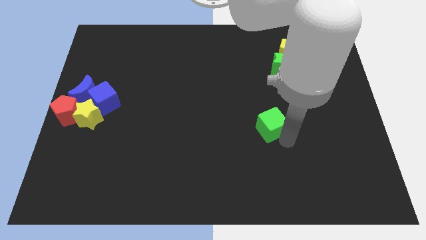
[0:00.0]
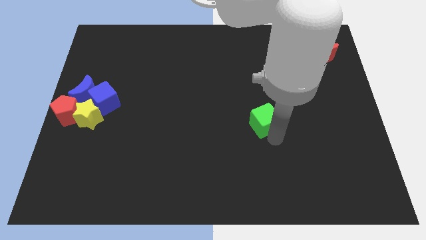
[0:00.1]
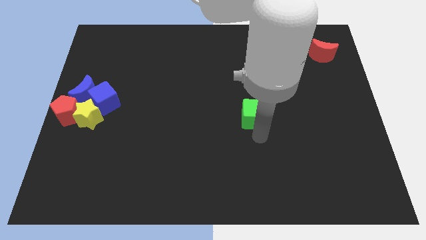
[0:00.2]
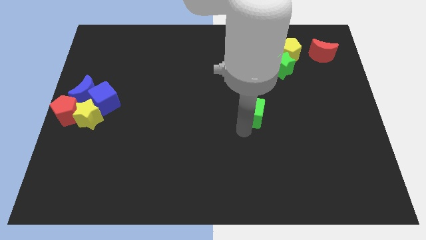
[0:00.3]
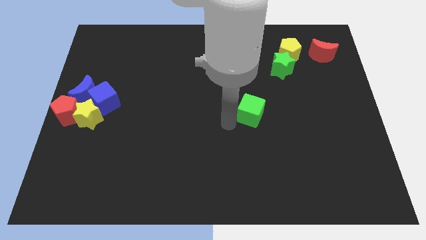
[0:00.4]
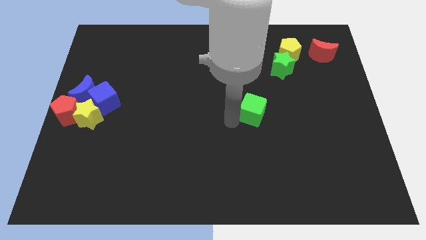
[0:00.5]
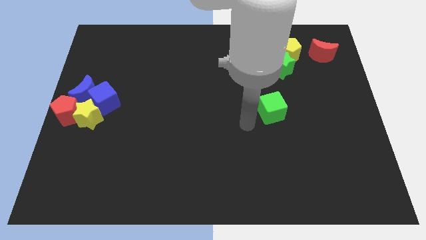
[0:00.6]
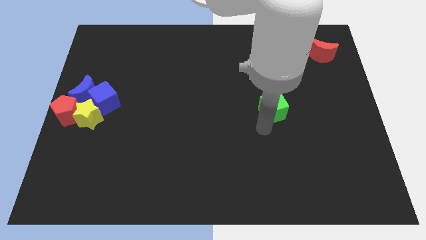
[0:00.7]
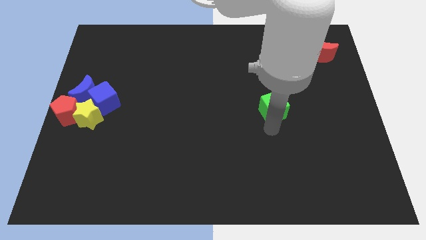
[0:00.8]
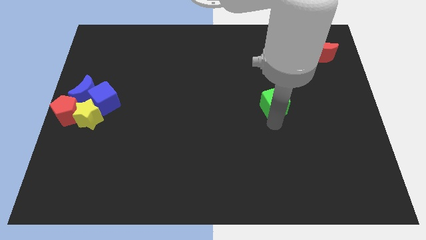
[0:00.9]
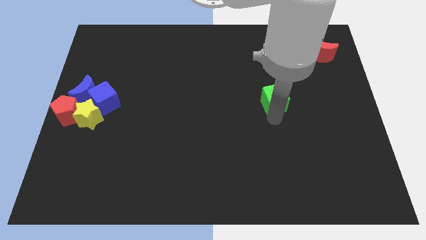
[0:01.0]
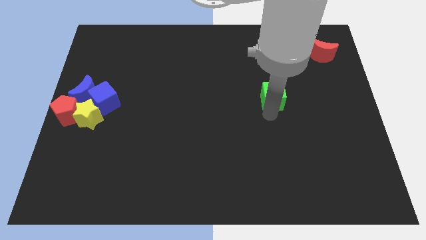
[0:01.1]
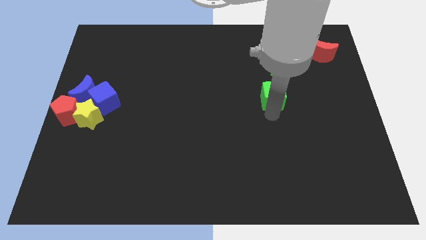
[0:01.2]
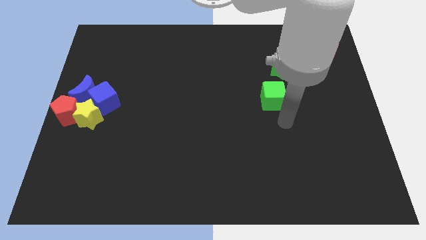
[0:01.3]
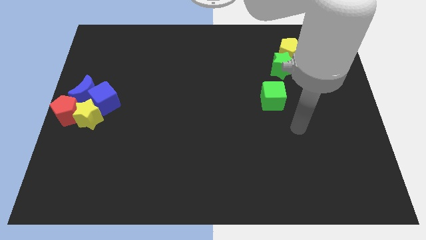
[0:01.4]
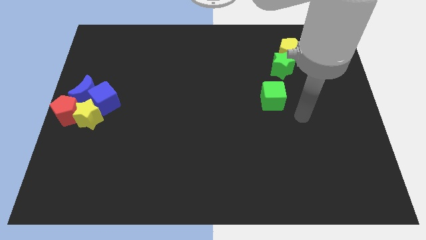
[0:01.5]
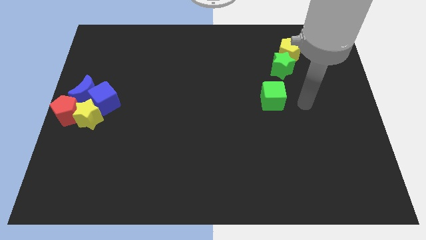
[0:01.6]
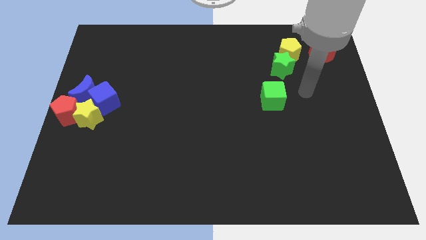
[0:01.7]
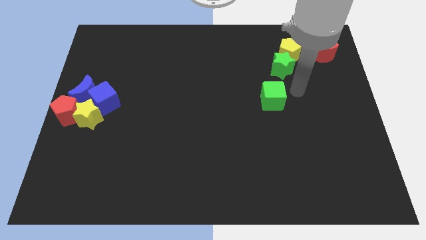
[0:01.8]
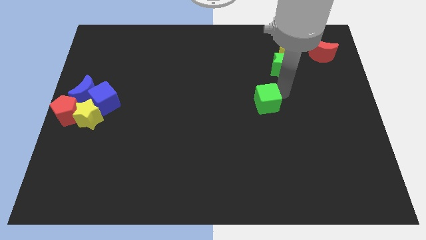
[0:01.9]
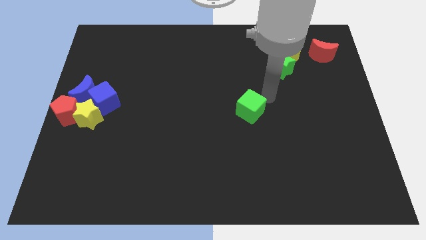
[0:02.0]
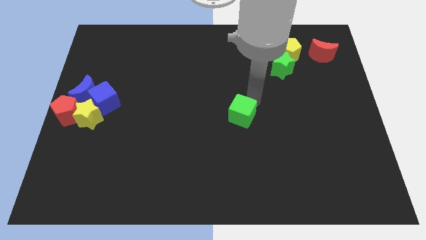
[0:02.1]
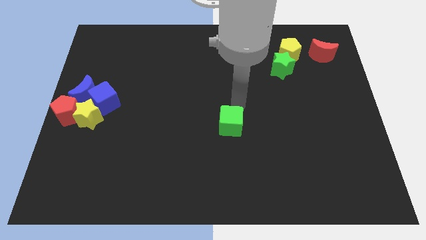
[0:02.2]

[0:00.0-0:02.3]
place green cube in the center

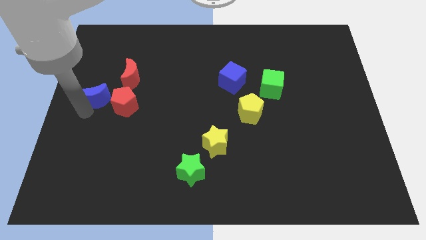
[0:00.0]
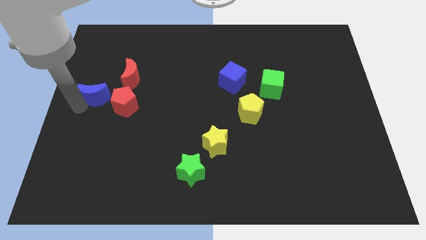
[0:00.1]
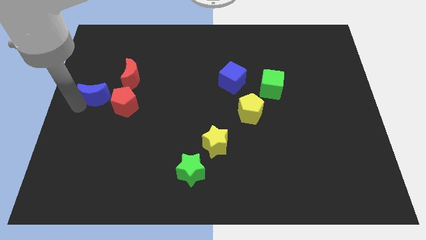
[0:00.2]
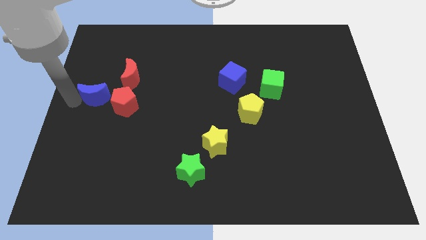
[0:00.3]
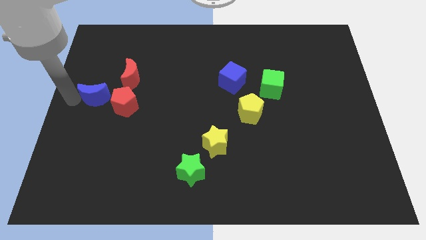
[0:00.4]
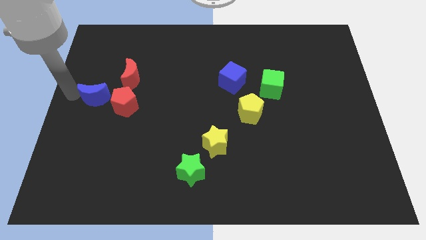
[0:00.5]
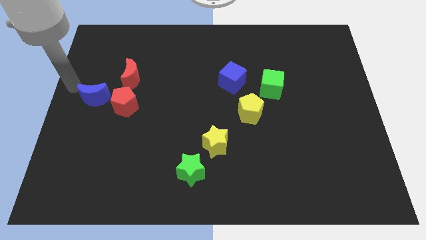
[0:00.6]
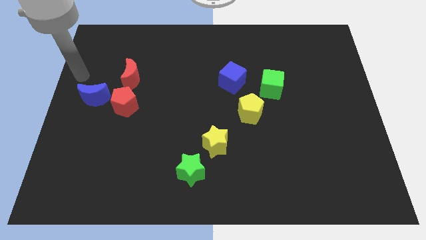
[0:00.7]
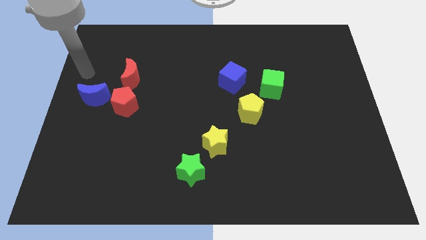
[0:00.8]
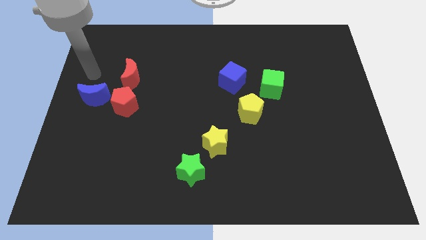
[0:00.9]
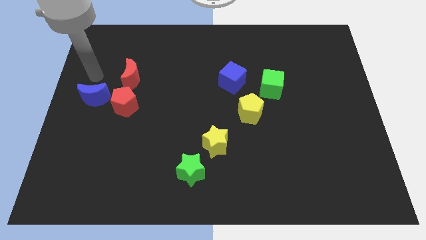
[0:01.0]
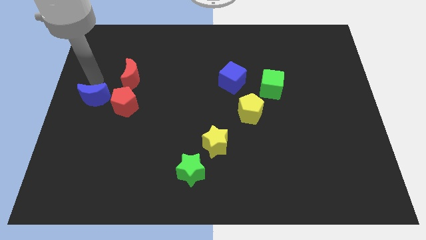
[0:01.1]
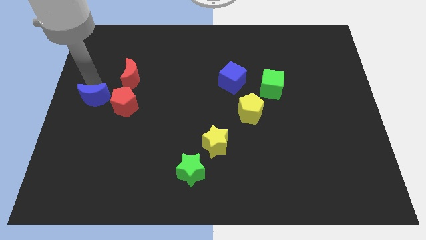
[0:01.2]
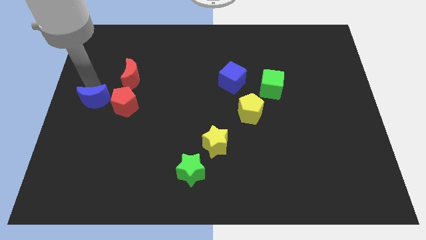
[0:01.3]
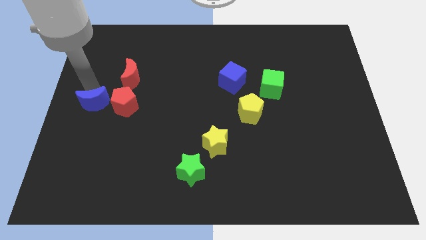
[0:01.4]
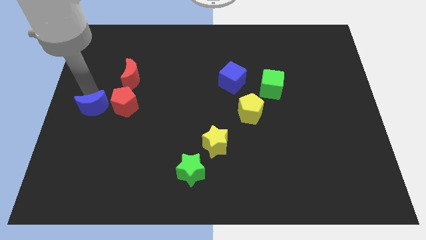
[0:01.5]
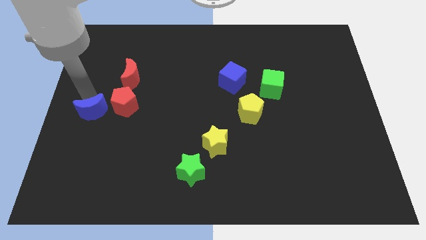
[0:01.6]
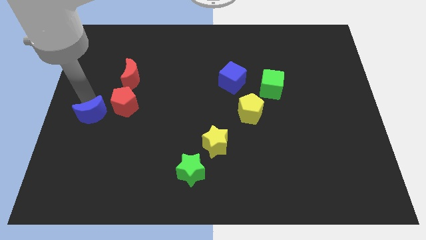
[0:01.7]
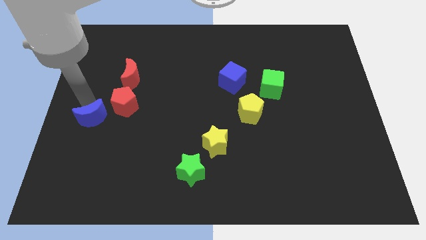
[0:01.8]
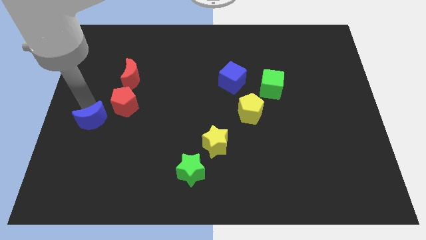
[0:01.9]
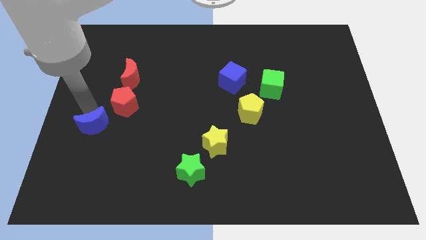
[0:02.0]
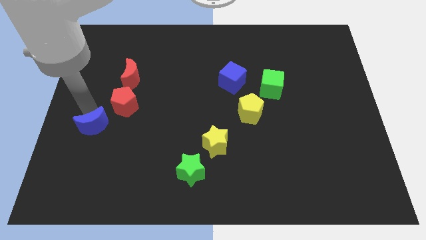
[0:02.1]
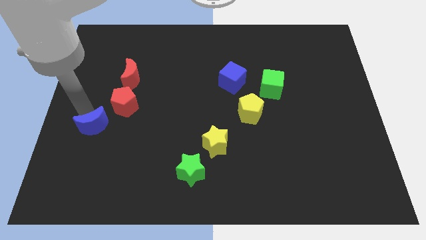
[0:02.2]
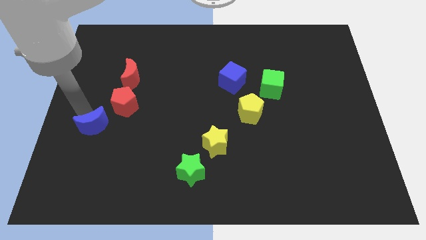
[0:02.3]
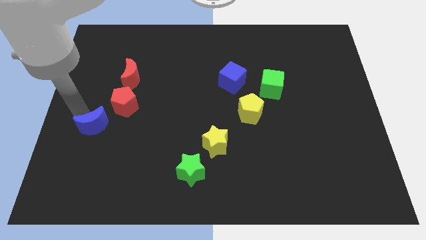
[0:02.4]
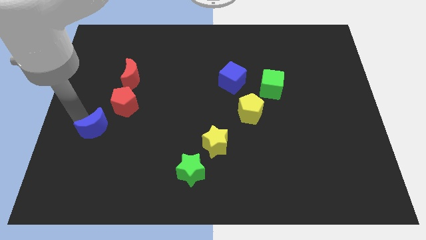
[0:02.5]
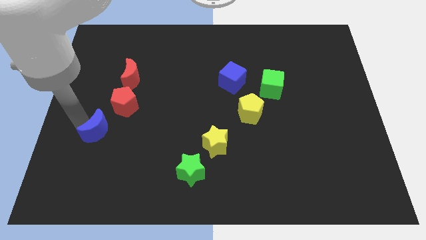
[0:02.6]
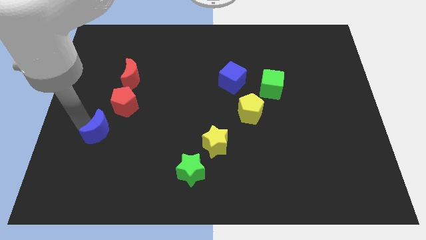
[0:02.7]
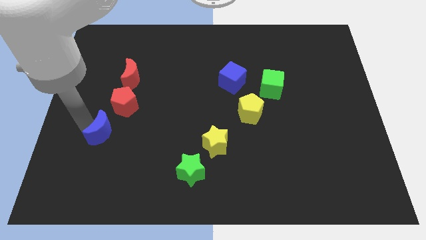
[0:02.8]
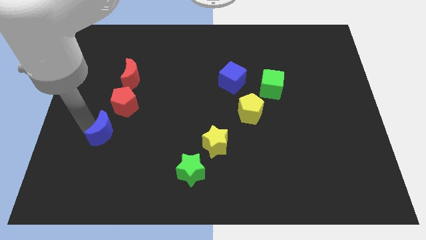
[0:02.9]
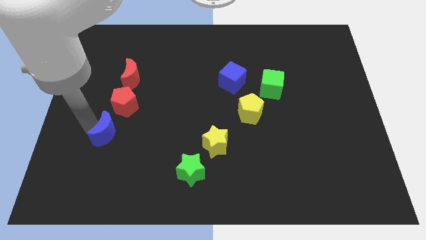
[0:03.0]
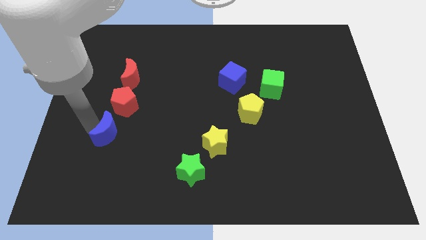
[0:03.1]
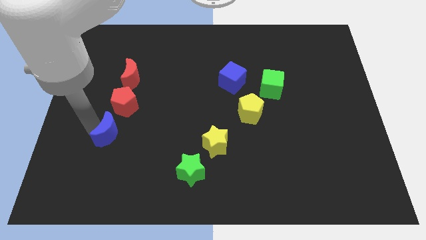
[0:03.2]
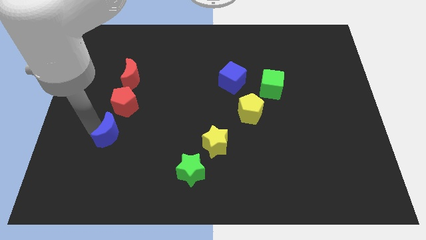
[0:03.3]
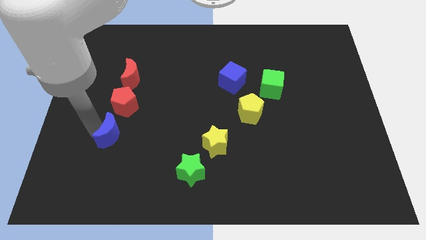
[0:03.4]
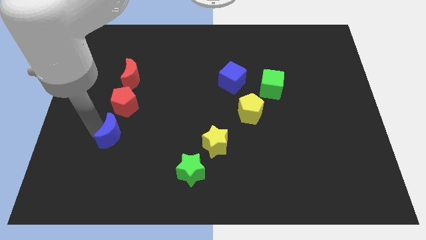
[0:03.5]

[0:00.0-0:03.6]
push the blue moon to the bottom side of the red pentagon

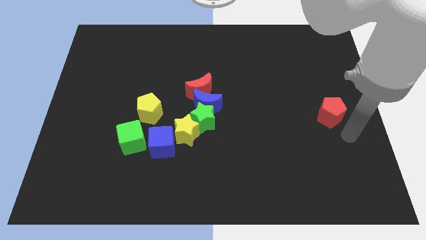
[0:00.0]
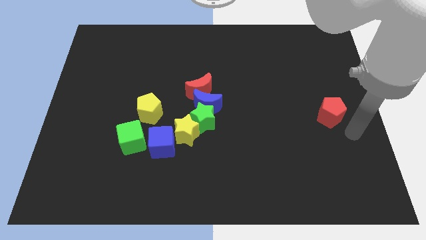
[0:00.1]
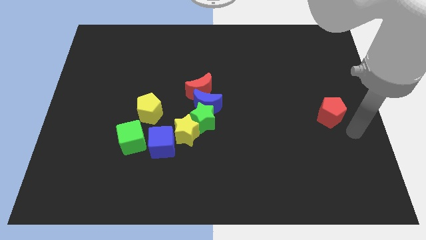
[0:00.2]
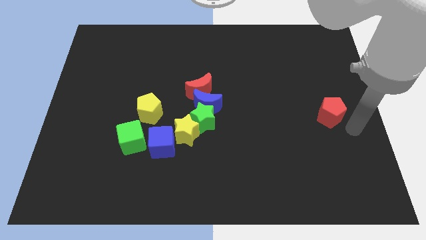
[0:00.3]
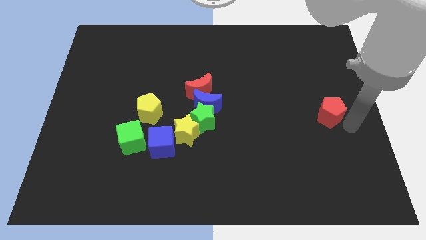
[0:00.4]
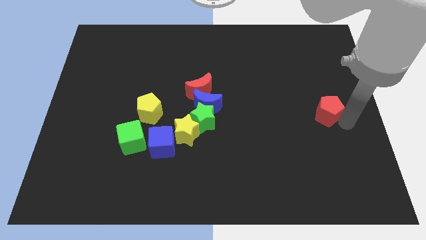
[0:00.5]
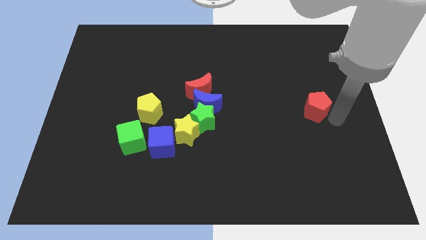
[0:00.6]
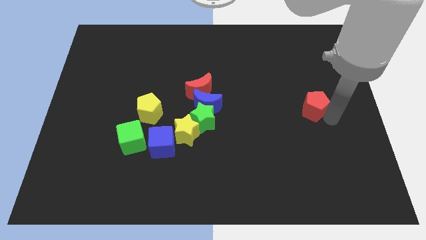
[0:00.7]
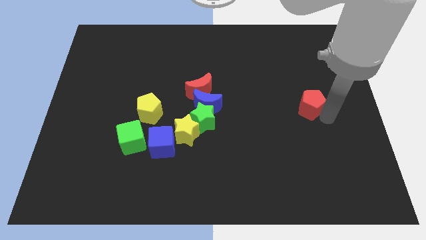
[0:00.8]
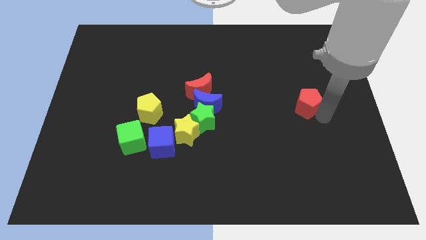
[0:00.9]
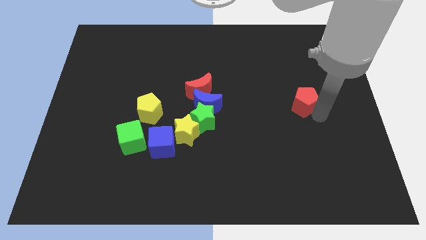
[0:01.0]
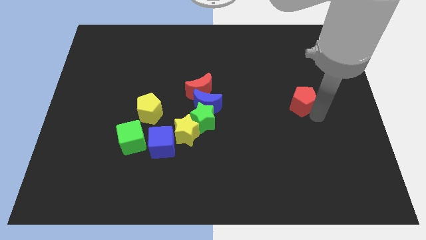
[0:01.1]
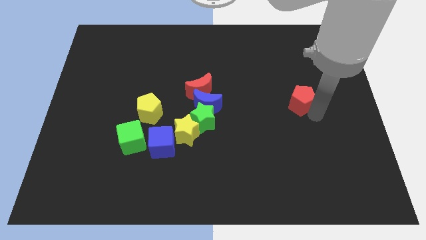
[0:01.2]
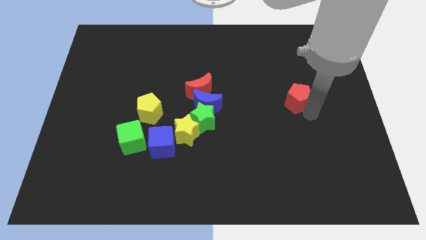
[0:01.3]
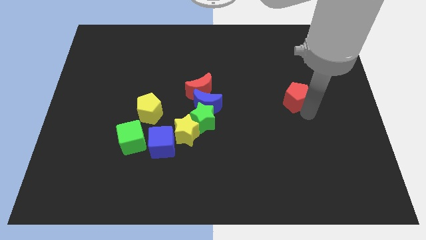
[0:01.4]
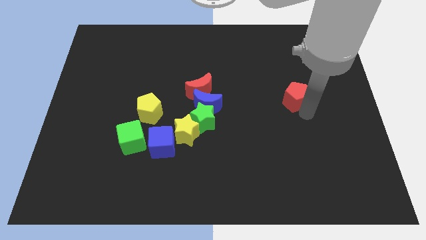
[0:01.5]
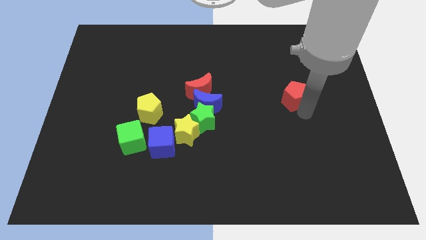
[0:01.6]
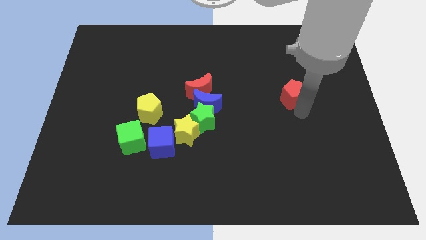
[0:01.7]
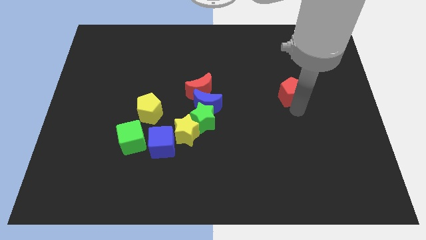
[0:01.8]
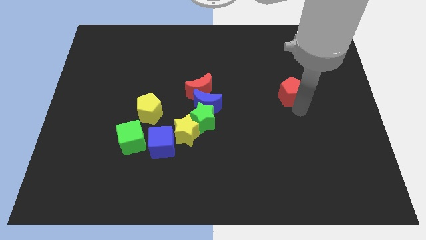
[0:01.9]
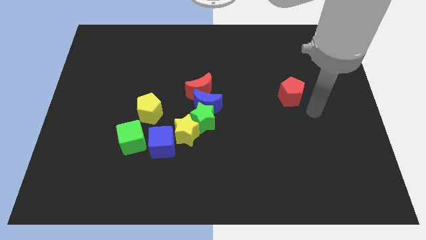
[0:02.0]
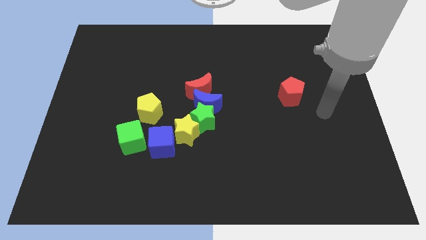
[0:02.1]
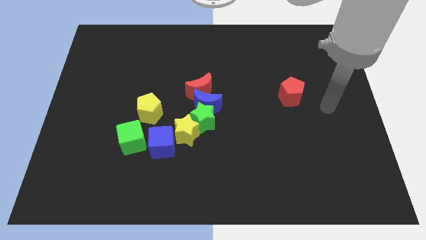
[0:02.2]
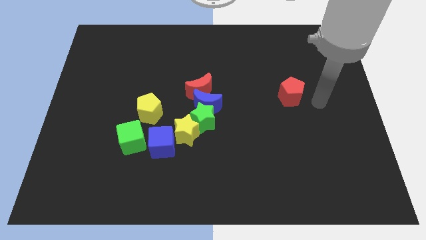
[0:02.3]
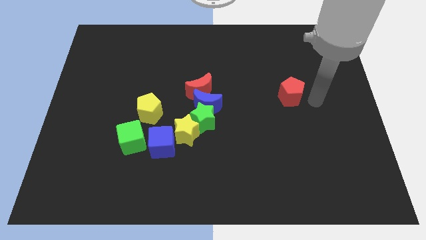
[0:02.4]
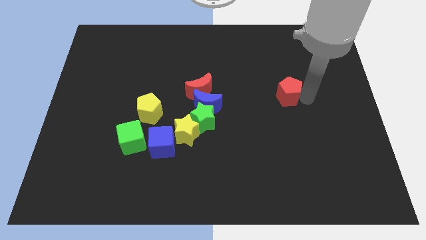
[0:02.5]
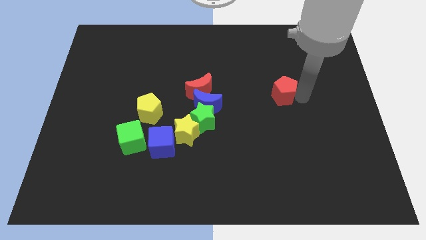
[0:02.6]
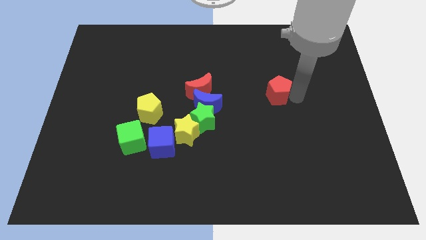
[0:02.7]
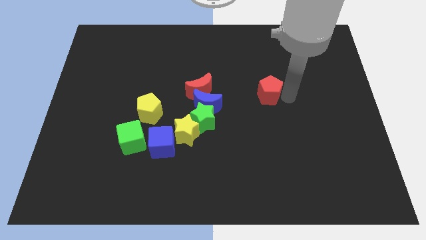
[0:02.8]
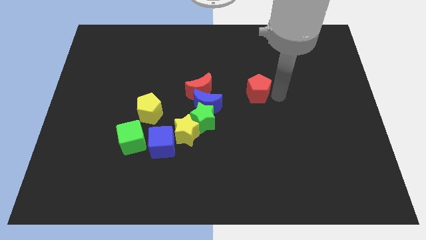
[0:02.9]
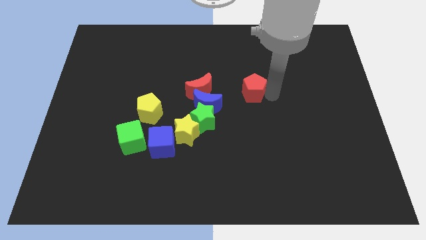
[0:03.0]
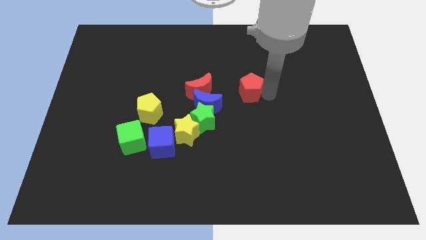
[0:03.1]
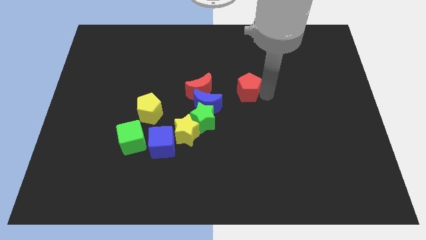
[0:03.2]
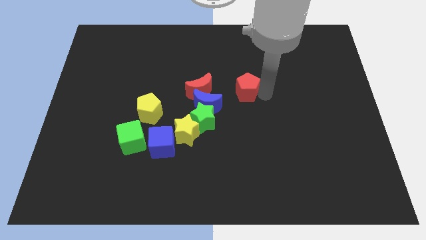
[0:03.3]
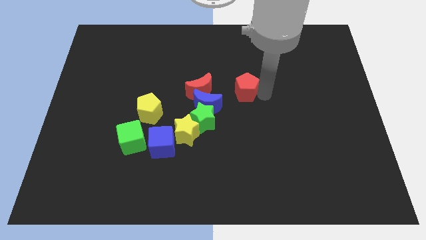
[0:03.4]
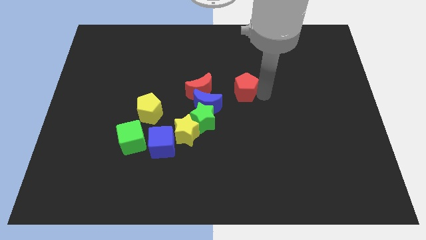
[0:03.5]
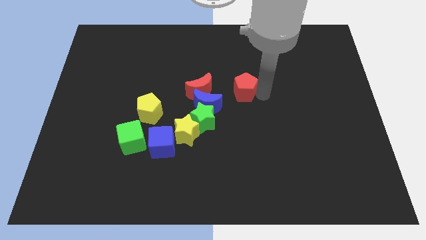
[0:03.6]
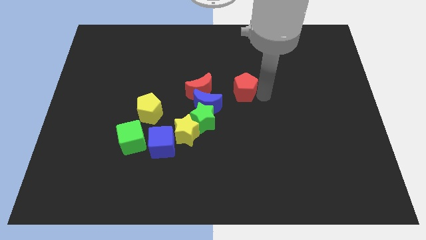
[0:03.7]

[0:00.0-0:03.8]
push the red pentagon towards the group of blocks
